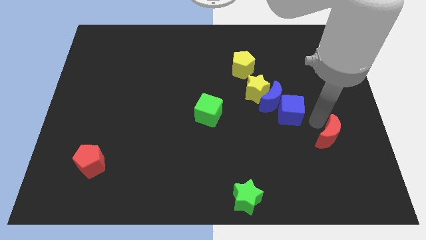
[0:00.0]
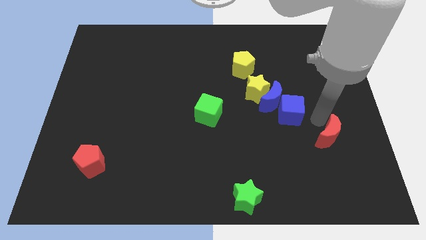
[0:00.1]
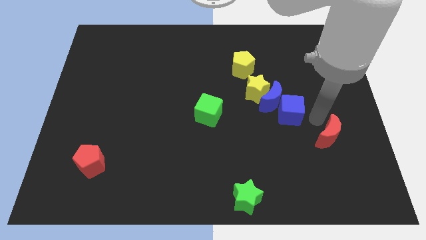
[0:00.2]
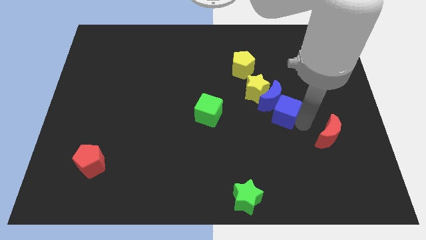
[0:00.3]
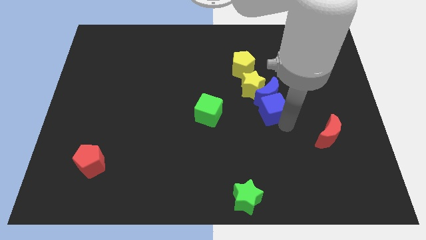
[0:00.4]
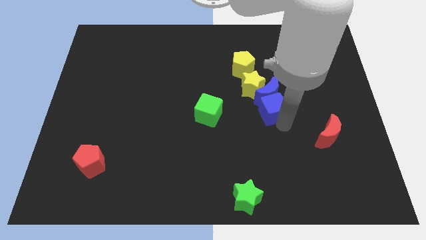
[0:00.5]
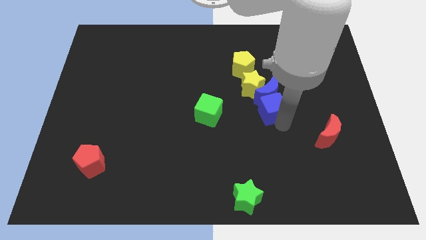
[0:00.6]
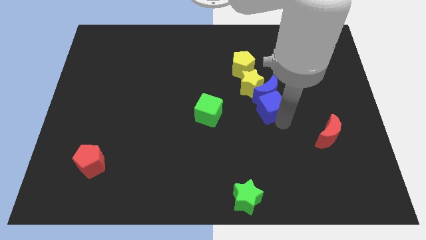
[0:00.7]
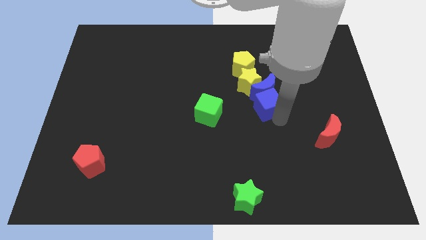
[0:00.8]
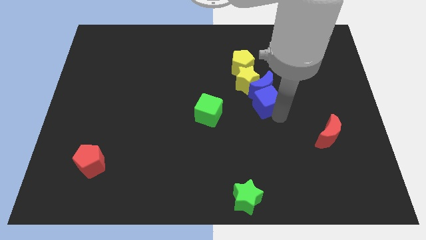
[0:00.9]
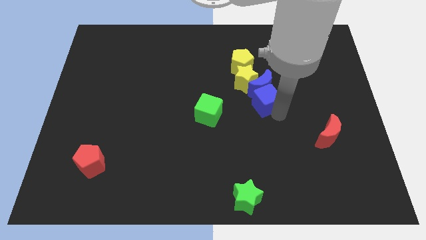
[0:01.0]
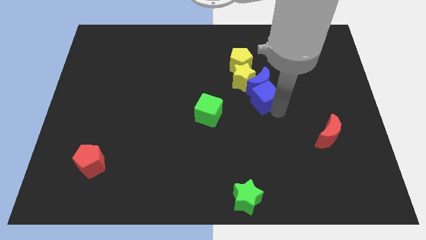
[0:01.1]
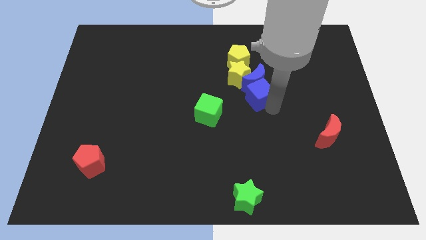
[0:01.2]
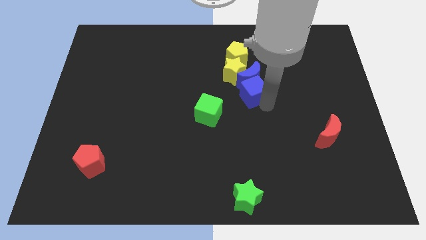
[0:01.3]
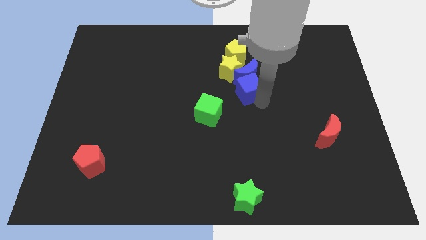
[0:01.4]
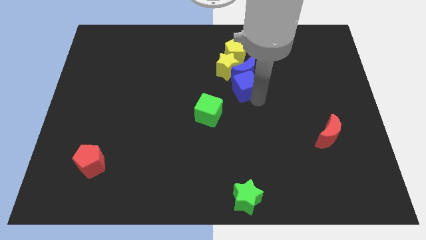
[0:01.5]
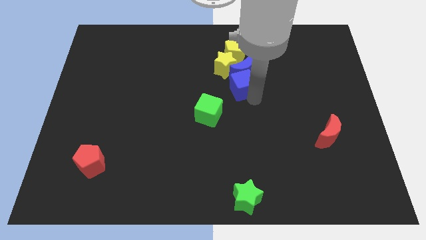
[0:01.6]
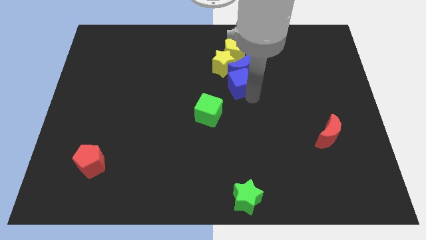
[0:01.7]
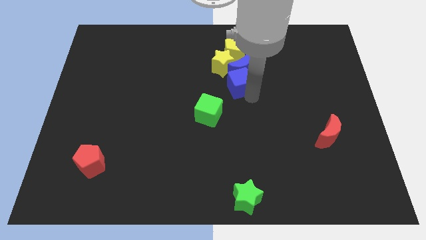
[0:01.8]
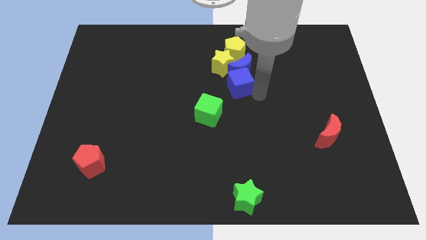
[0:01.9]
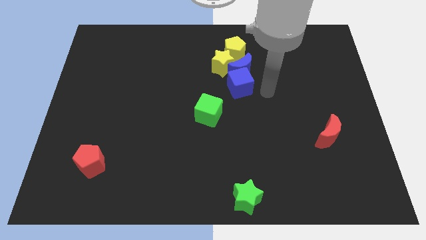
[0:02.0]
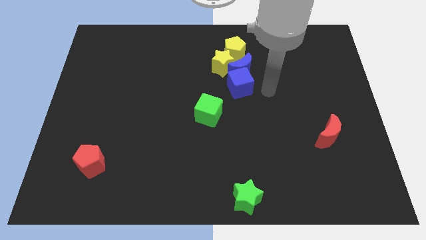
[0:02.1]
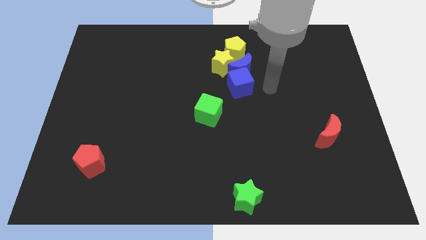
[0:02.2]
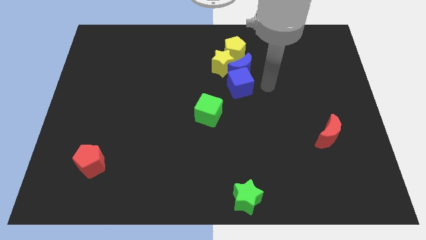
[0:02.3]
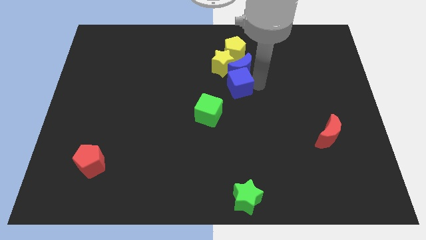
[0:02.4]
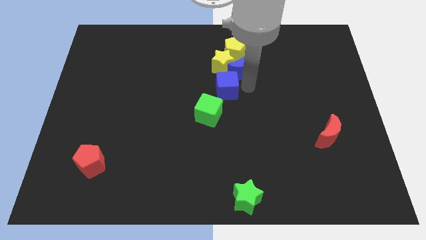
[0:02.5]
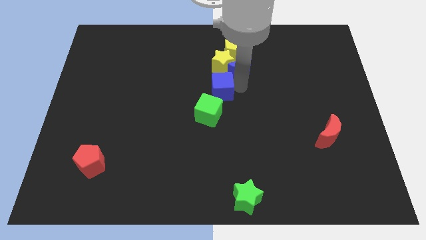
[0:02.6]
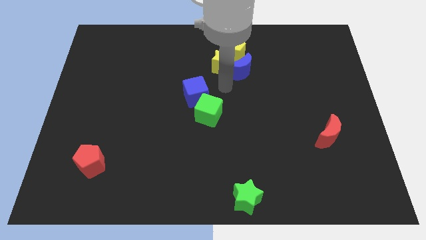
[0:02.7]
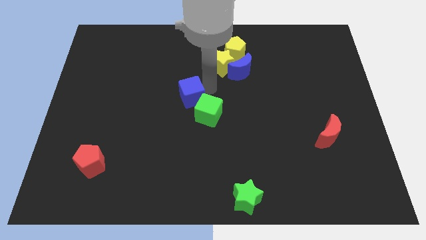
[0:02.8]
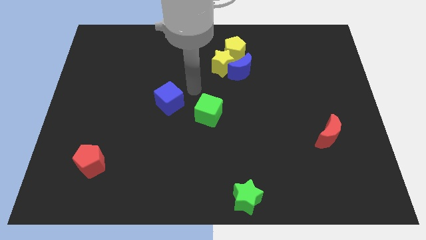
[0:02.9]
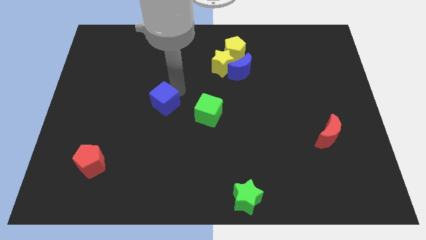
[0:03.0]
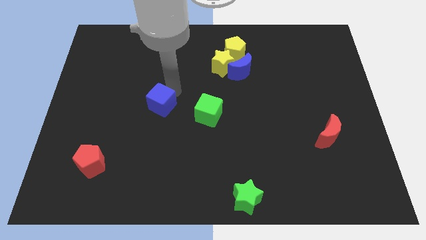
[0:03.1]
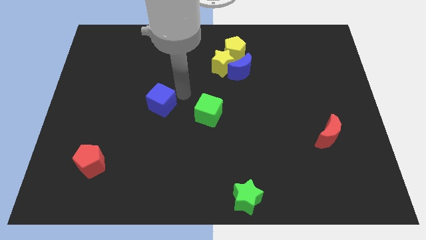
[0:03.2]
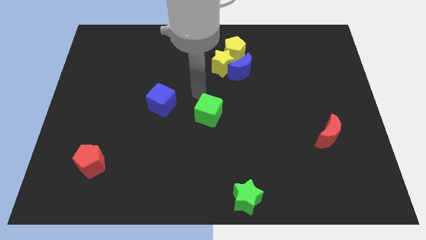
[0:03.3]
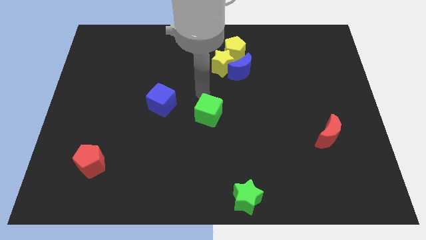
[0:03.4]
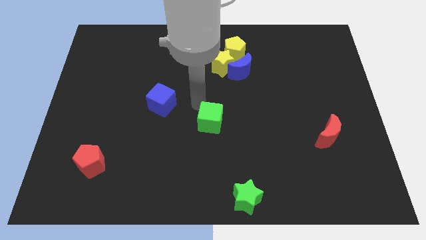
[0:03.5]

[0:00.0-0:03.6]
push the blue and yellow blocks slightly to the top and separate the blue cube away from it

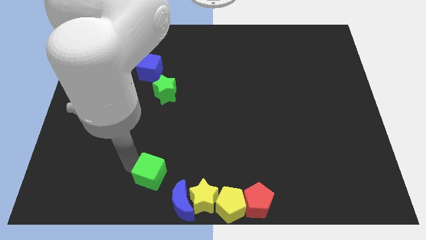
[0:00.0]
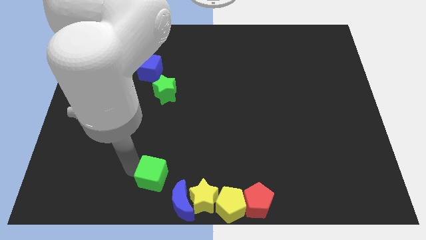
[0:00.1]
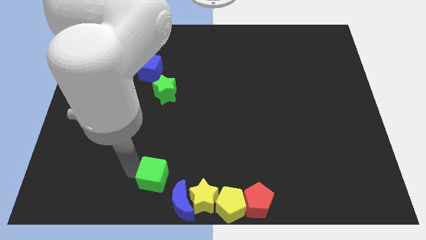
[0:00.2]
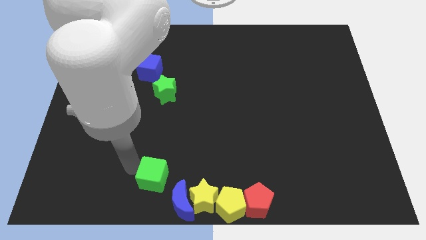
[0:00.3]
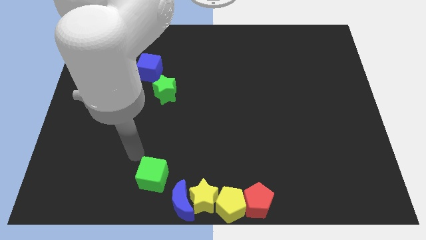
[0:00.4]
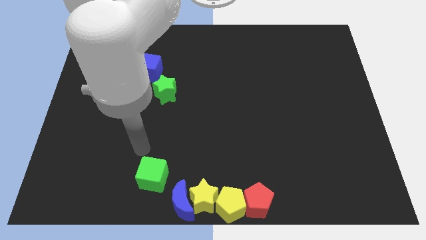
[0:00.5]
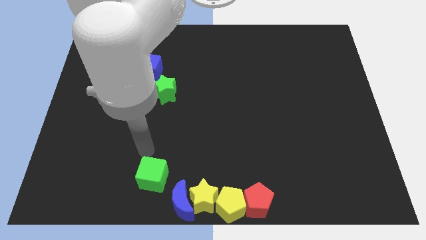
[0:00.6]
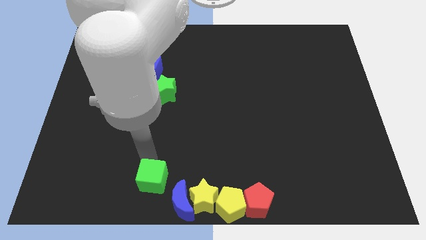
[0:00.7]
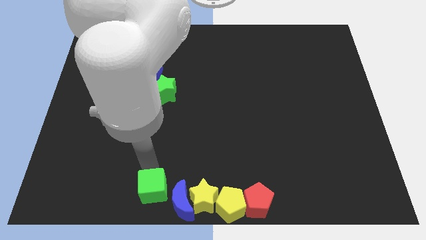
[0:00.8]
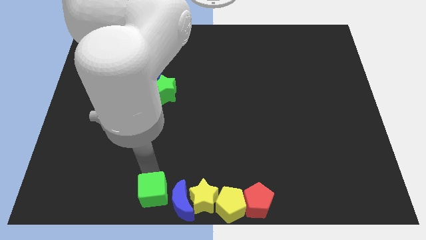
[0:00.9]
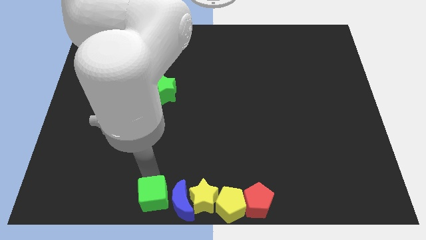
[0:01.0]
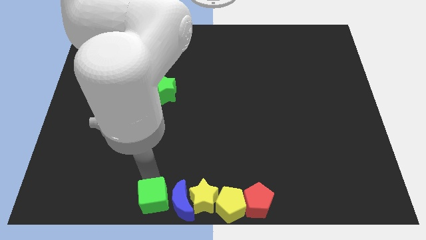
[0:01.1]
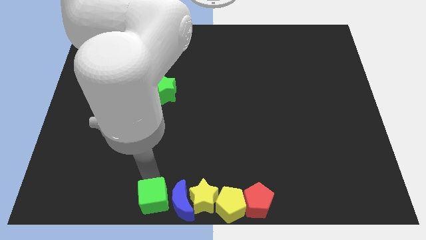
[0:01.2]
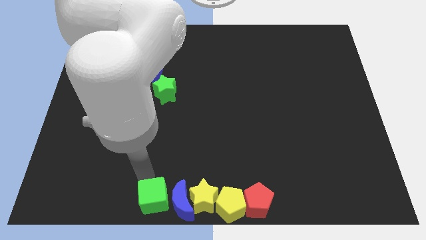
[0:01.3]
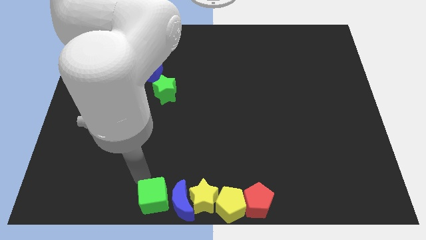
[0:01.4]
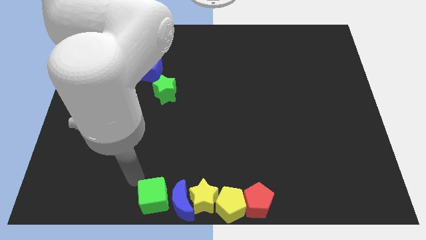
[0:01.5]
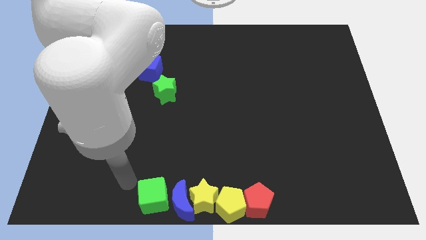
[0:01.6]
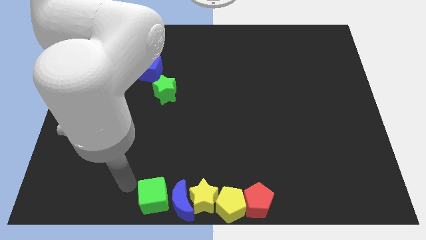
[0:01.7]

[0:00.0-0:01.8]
put the green cube parallel left to the blue moon

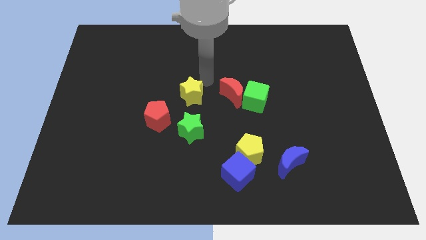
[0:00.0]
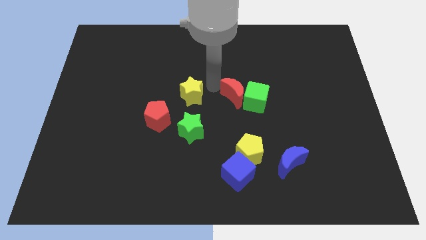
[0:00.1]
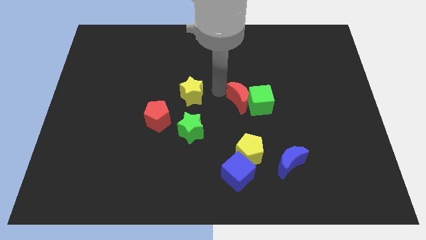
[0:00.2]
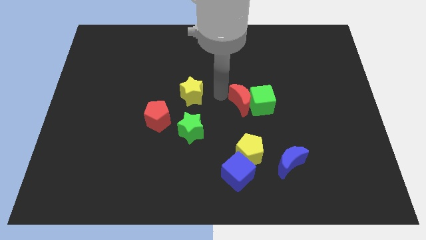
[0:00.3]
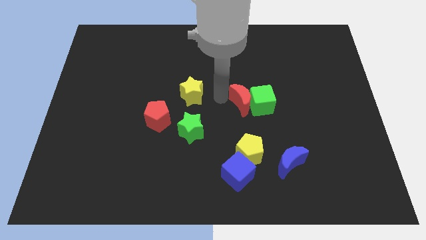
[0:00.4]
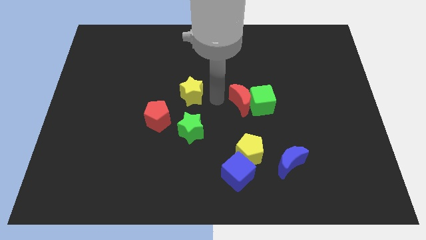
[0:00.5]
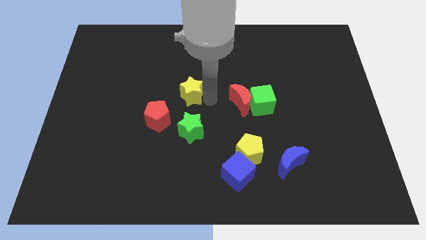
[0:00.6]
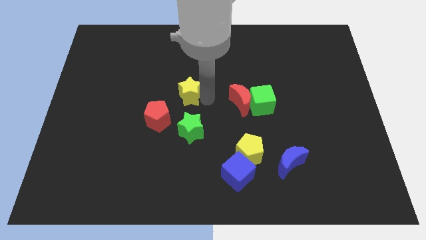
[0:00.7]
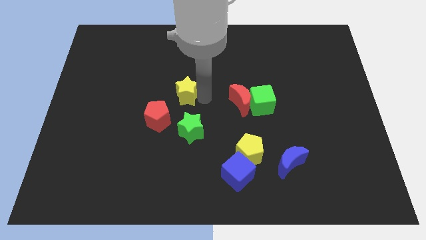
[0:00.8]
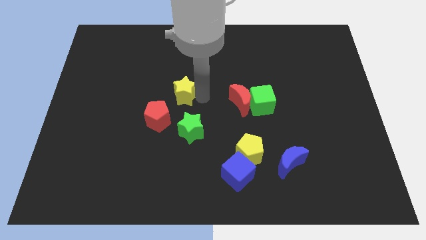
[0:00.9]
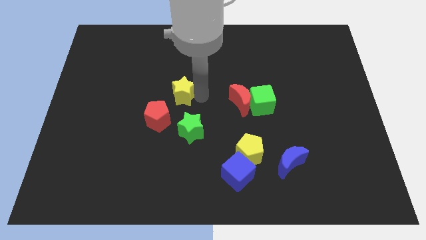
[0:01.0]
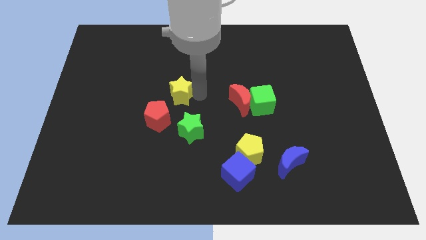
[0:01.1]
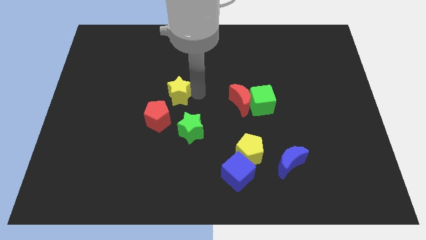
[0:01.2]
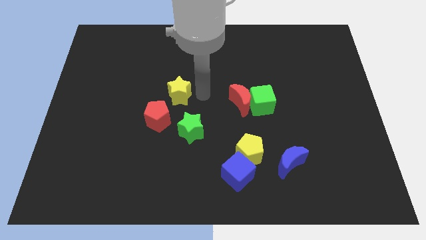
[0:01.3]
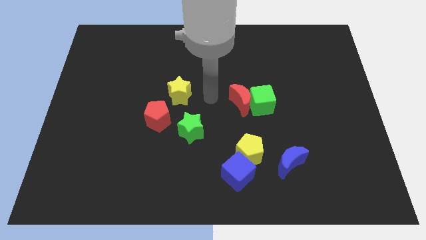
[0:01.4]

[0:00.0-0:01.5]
move the yellow star to the left

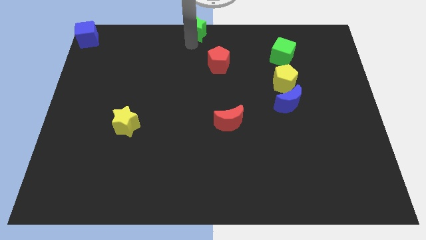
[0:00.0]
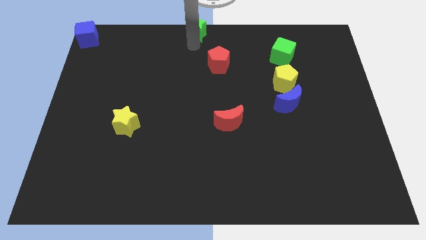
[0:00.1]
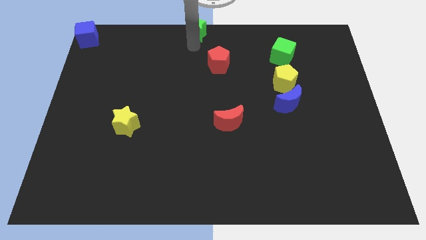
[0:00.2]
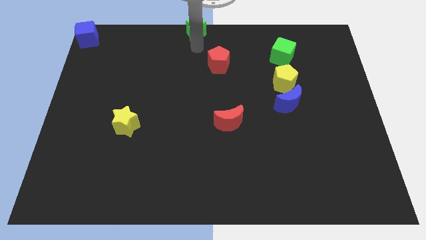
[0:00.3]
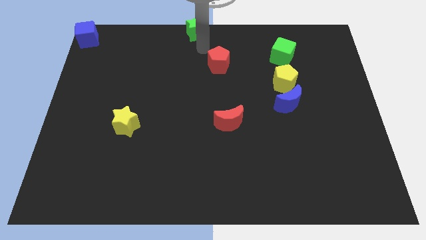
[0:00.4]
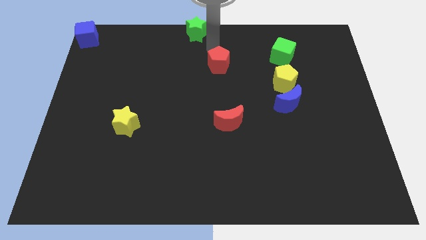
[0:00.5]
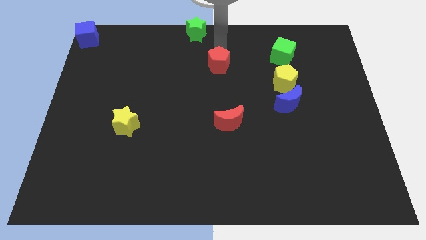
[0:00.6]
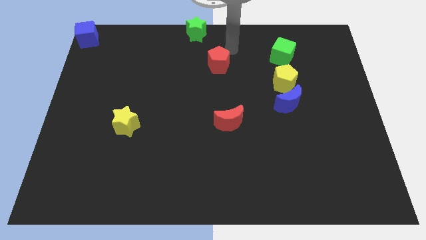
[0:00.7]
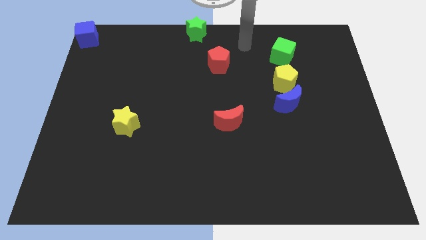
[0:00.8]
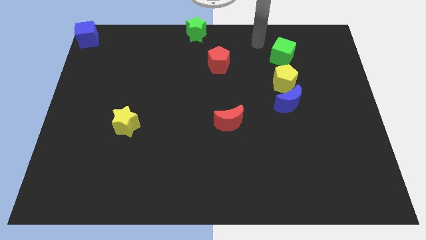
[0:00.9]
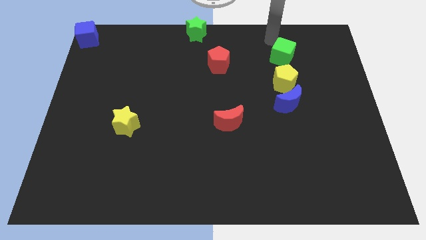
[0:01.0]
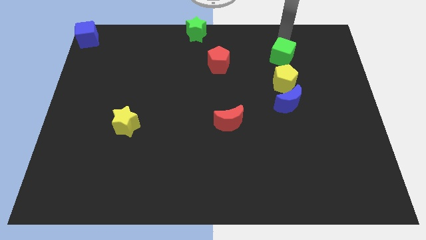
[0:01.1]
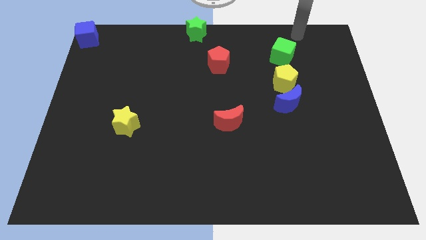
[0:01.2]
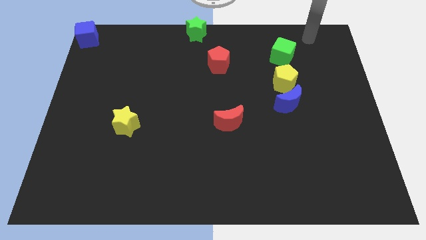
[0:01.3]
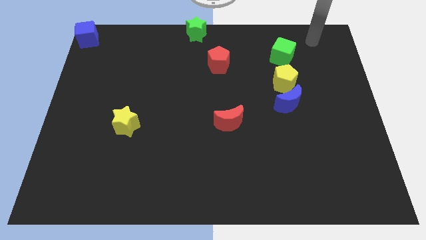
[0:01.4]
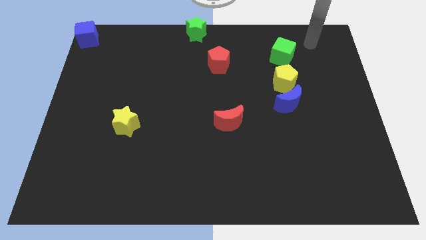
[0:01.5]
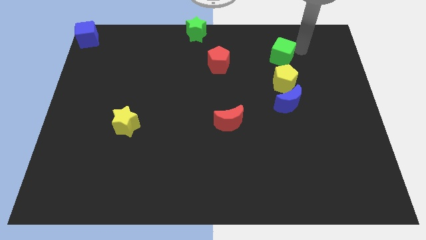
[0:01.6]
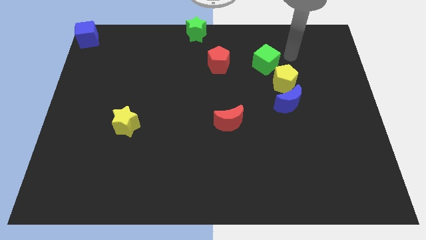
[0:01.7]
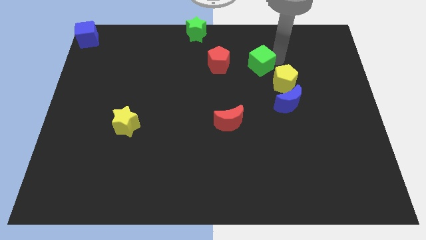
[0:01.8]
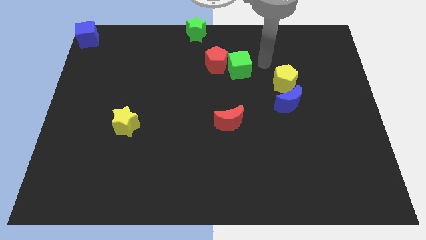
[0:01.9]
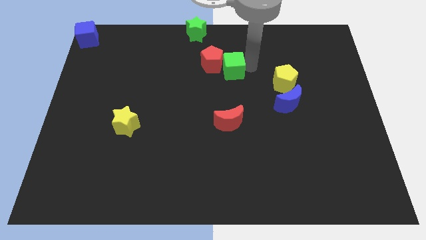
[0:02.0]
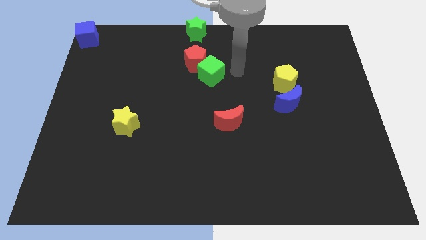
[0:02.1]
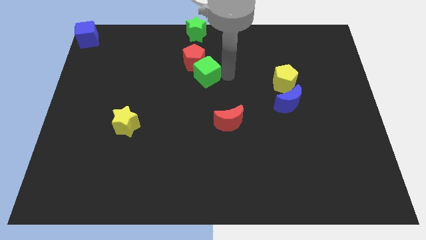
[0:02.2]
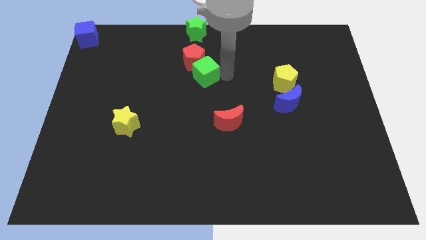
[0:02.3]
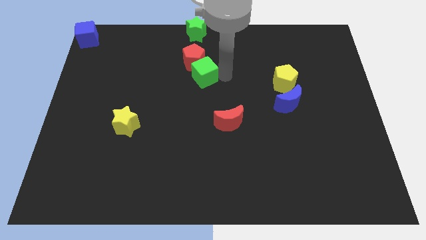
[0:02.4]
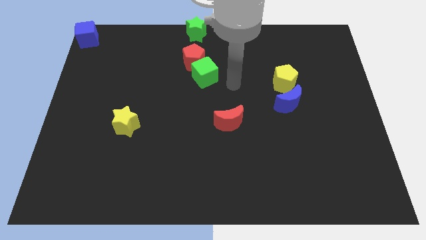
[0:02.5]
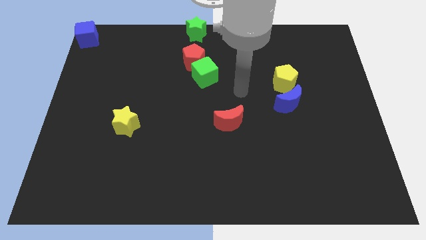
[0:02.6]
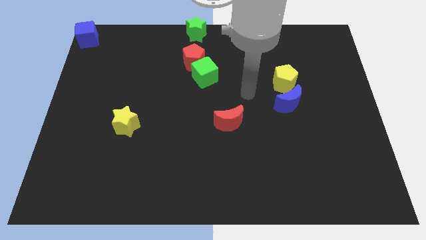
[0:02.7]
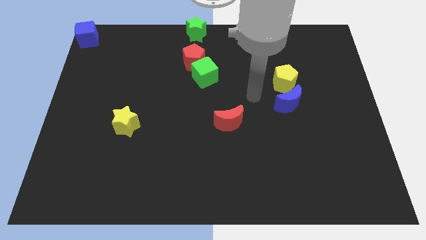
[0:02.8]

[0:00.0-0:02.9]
push the green cube down to the red pentagon
